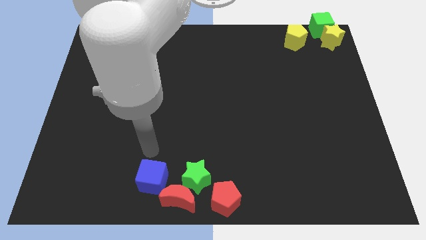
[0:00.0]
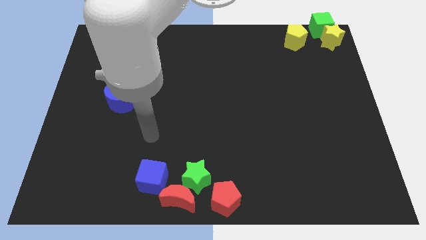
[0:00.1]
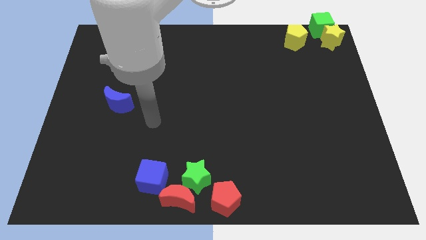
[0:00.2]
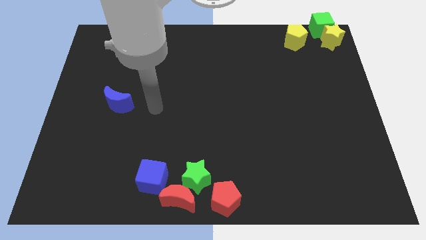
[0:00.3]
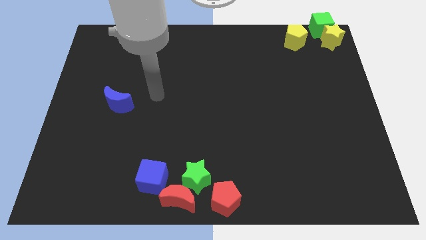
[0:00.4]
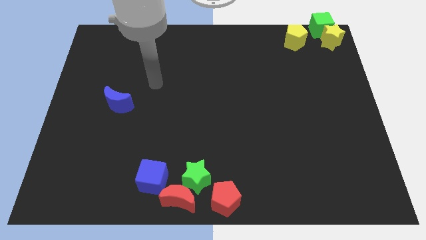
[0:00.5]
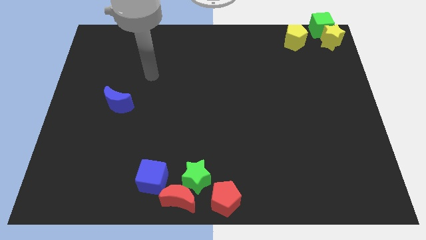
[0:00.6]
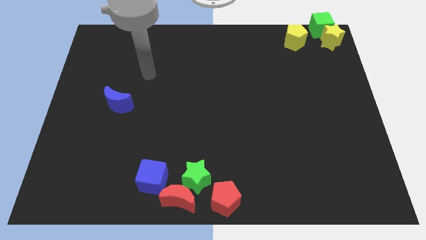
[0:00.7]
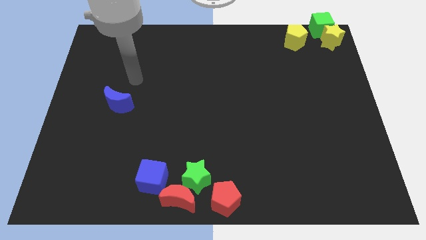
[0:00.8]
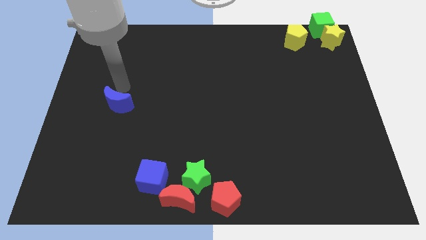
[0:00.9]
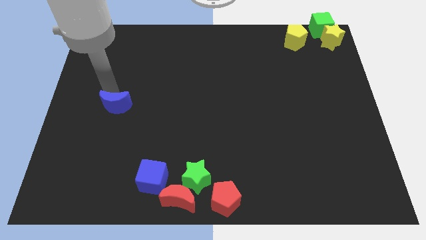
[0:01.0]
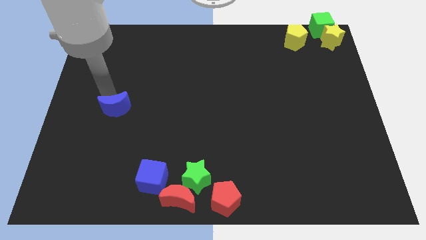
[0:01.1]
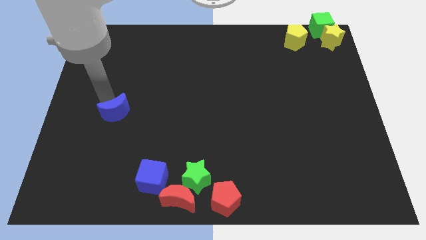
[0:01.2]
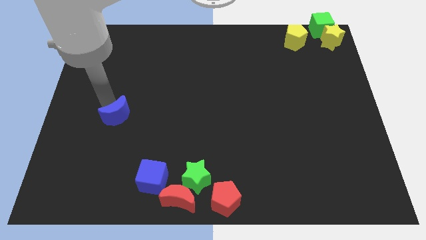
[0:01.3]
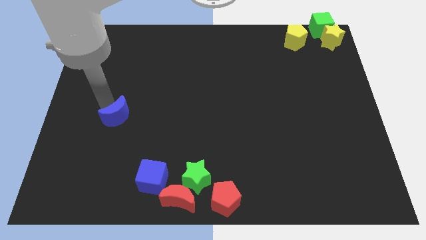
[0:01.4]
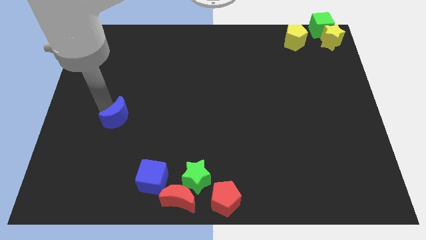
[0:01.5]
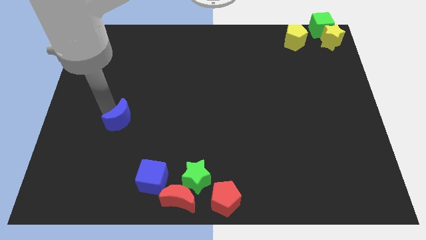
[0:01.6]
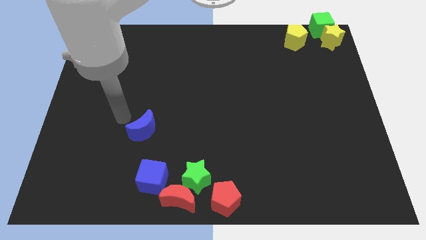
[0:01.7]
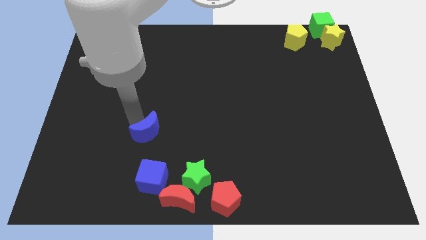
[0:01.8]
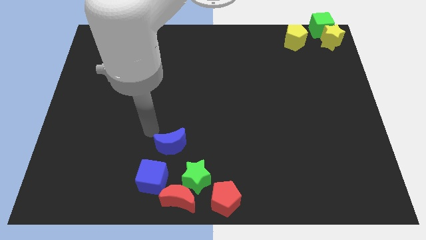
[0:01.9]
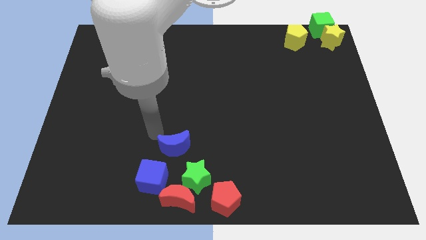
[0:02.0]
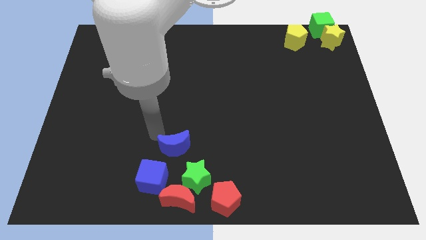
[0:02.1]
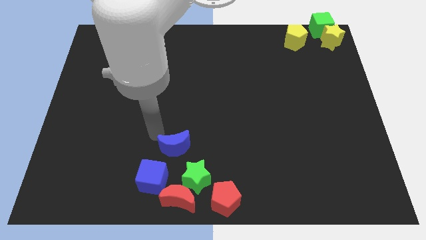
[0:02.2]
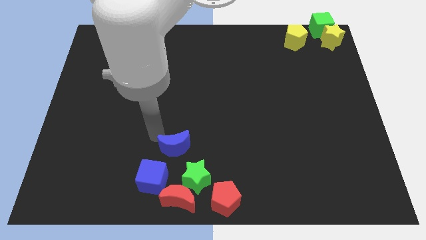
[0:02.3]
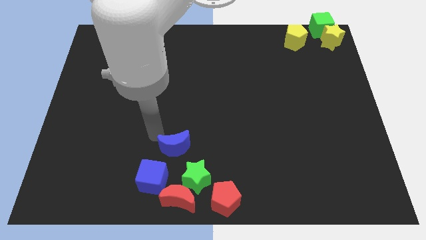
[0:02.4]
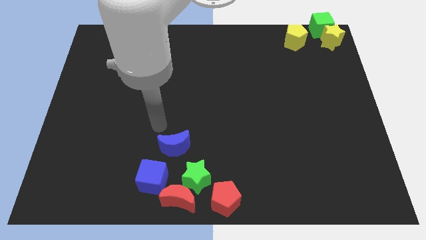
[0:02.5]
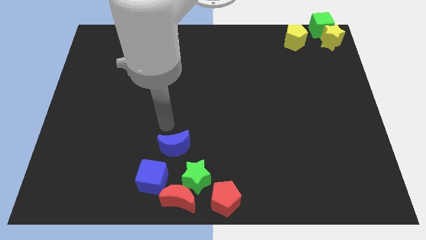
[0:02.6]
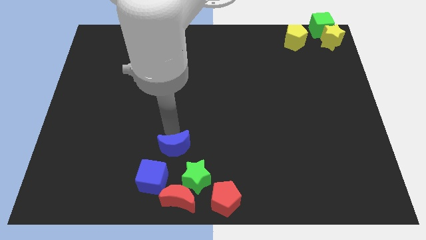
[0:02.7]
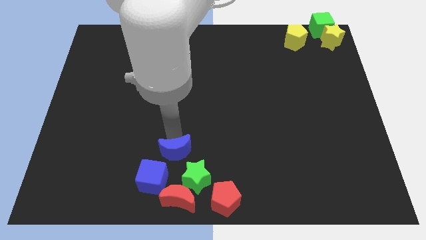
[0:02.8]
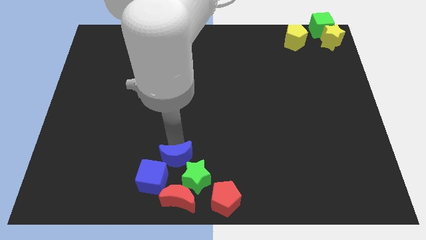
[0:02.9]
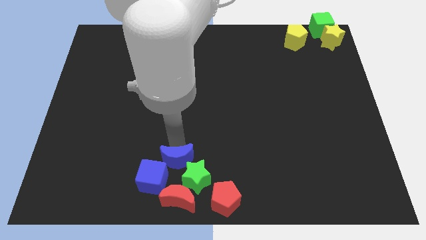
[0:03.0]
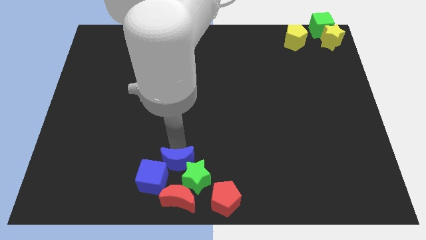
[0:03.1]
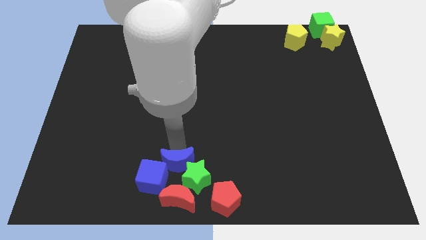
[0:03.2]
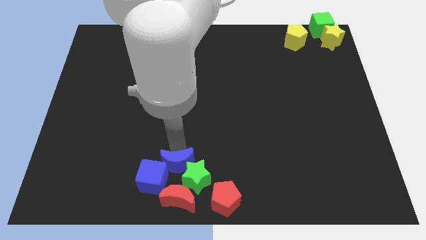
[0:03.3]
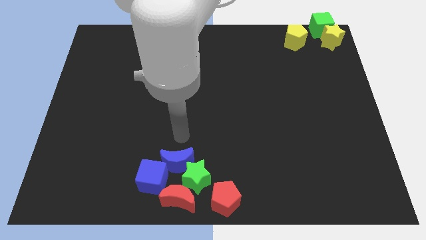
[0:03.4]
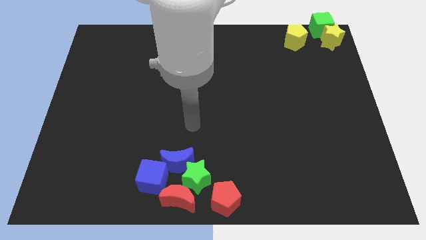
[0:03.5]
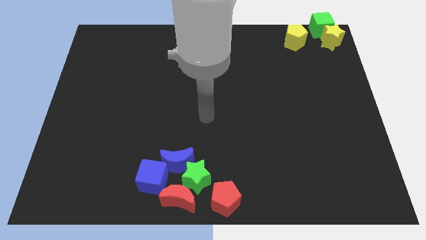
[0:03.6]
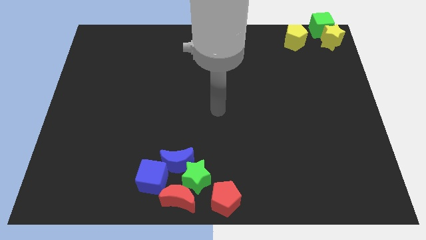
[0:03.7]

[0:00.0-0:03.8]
place blue crescent on top of blue block and green star

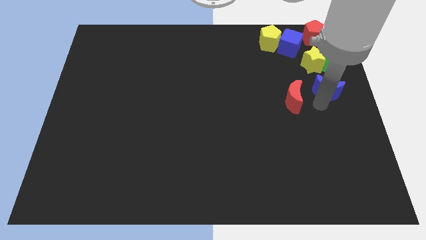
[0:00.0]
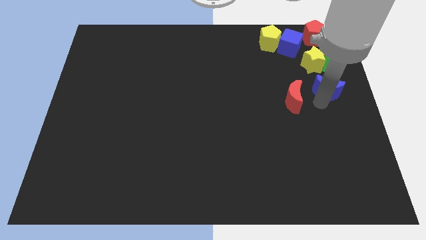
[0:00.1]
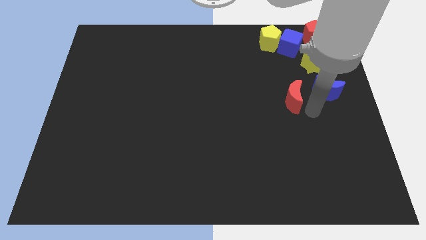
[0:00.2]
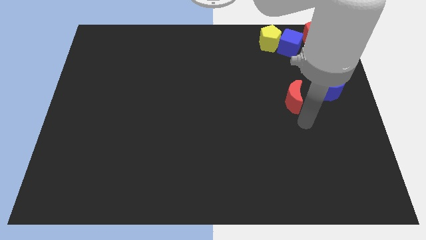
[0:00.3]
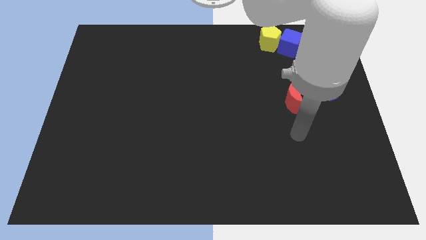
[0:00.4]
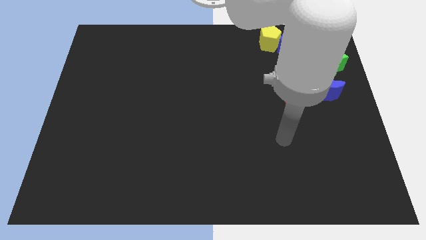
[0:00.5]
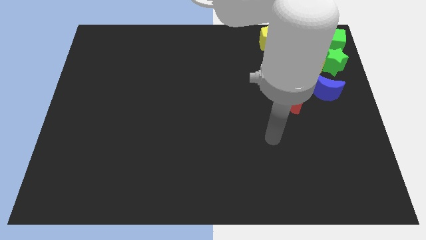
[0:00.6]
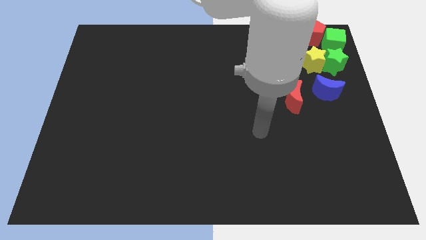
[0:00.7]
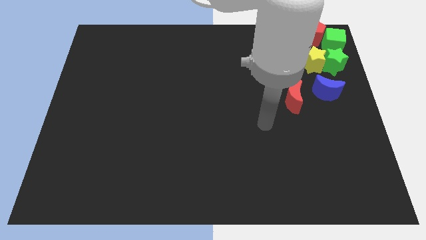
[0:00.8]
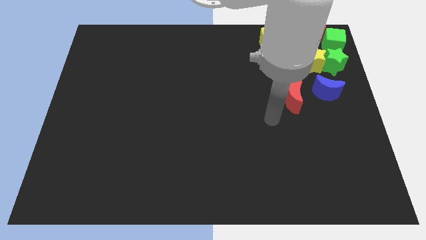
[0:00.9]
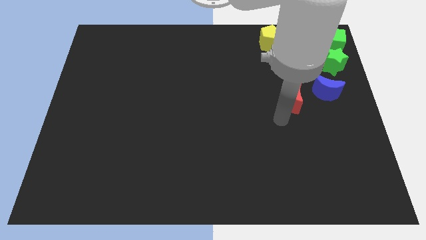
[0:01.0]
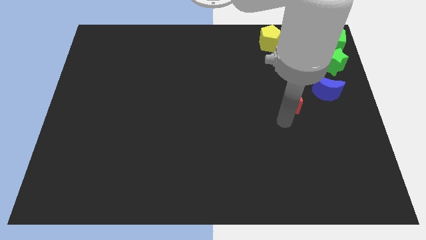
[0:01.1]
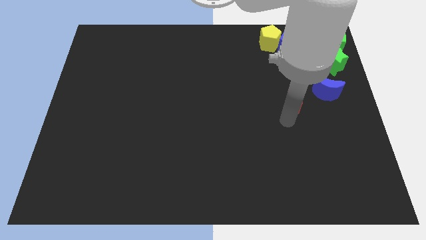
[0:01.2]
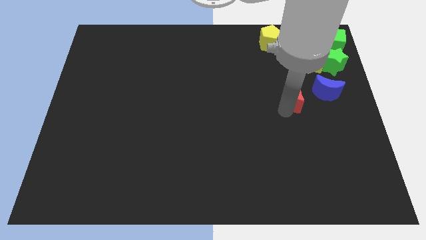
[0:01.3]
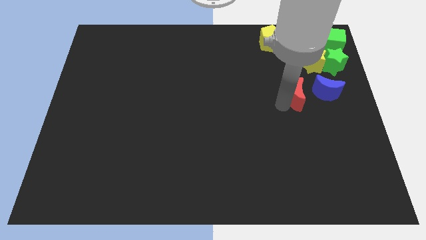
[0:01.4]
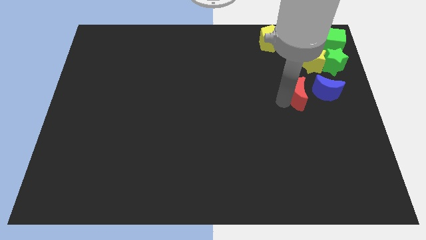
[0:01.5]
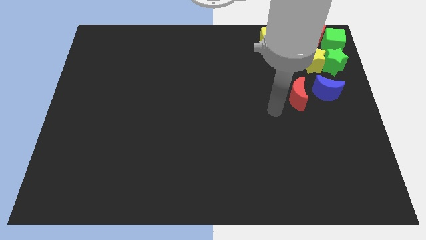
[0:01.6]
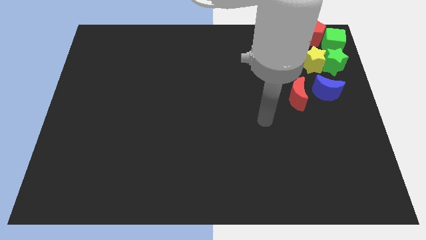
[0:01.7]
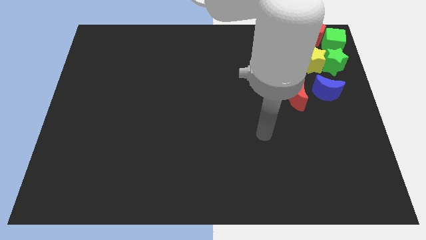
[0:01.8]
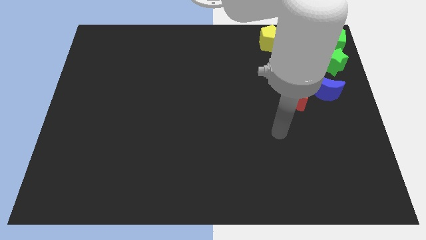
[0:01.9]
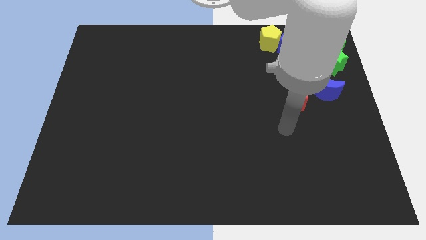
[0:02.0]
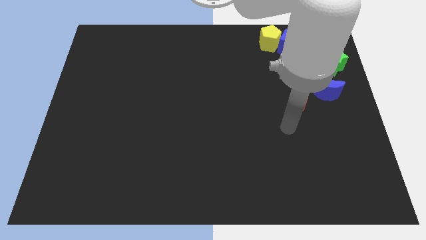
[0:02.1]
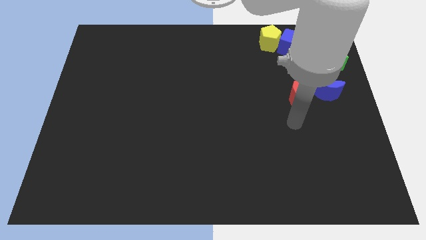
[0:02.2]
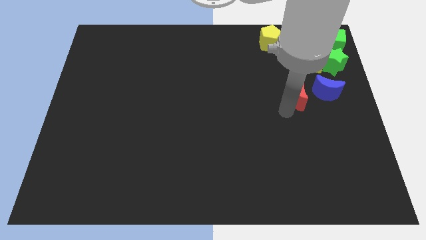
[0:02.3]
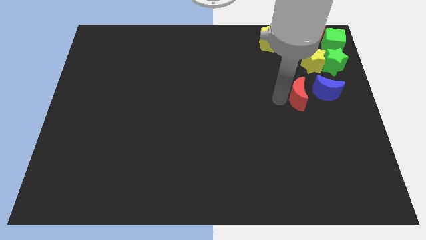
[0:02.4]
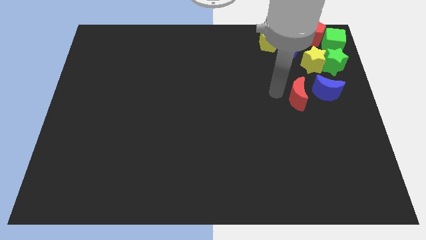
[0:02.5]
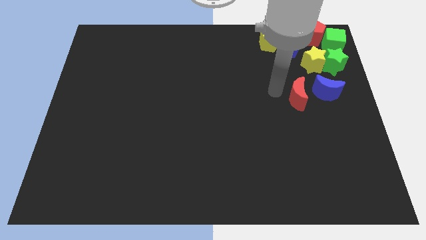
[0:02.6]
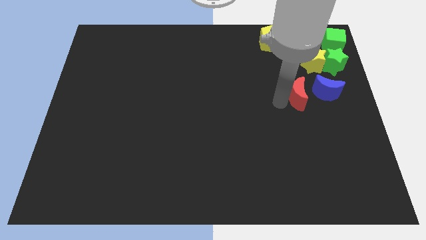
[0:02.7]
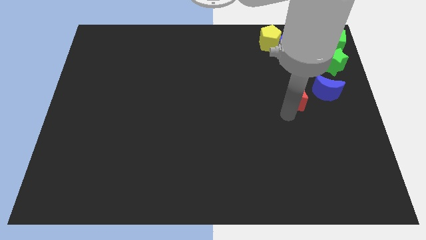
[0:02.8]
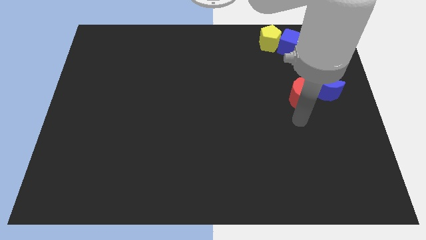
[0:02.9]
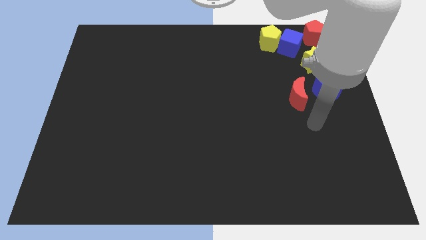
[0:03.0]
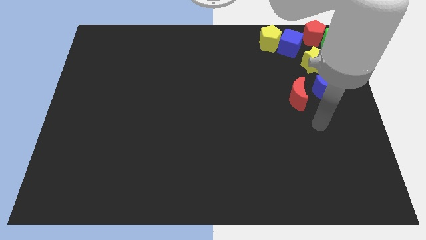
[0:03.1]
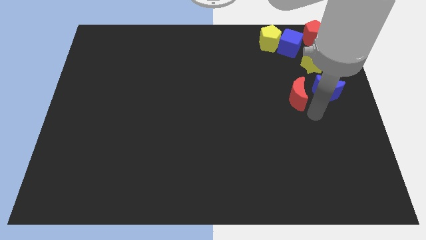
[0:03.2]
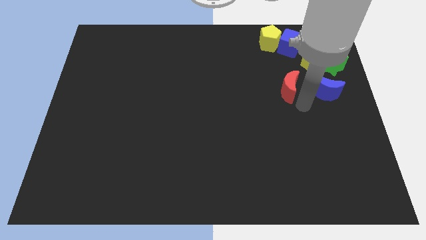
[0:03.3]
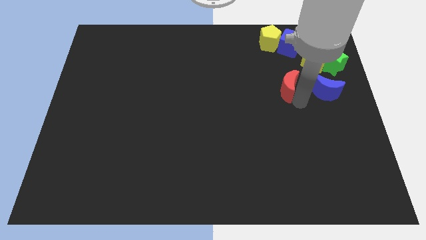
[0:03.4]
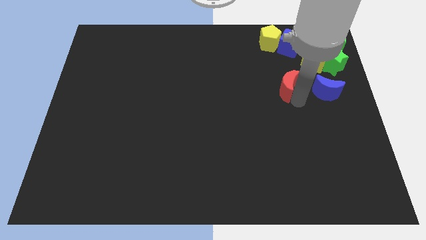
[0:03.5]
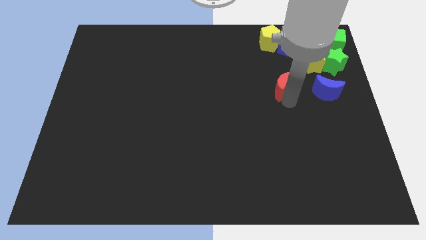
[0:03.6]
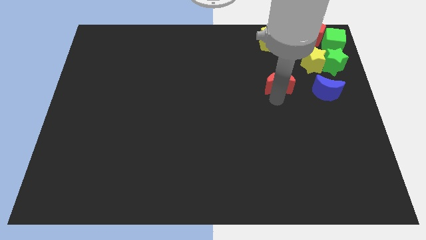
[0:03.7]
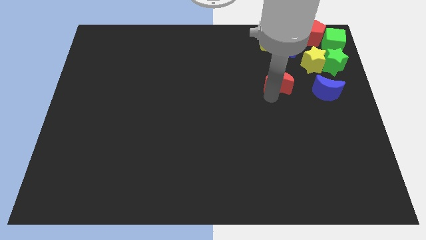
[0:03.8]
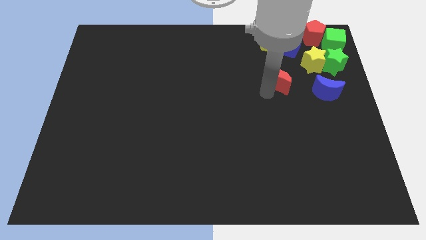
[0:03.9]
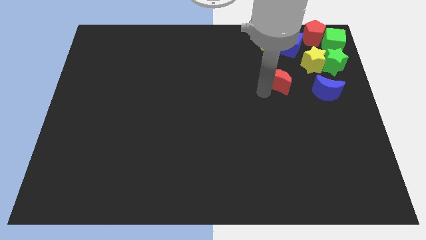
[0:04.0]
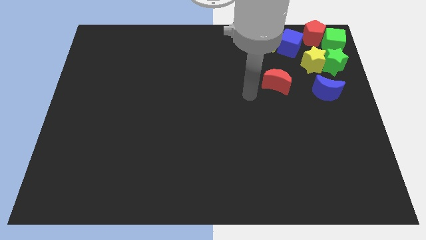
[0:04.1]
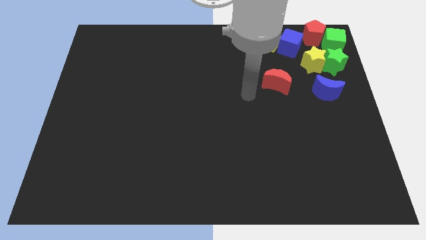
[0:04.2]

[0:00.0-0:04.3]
move the red crescent slightly to the left

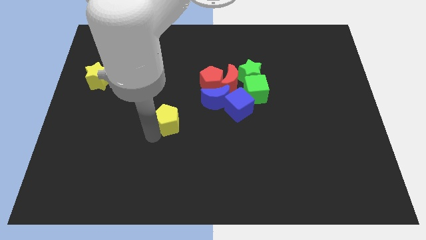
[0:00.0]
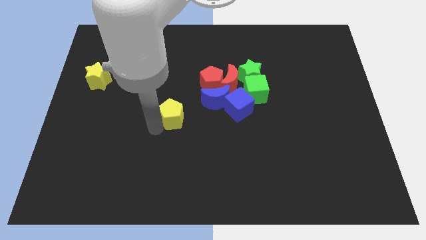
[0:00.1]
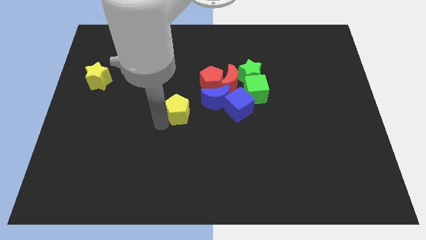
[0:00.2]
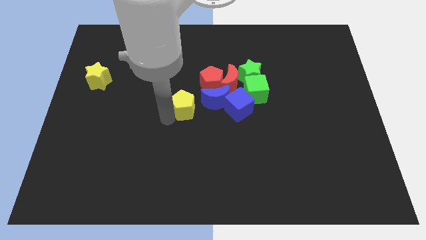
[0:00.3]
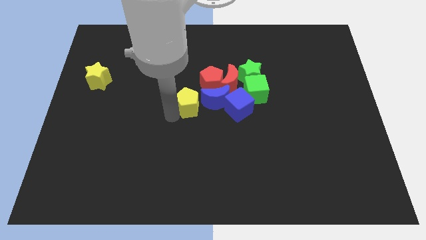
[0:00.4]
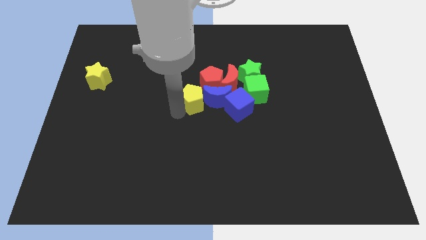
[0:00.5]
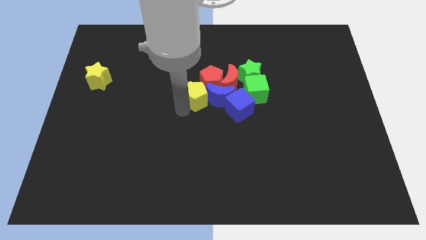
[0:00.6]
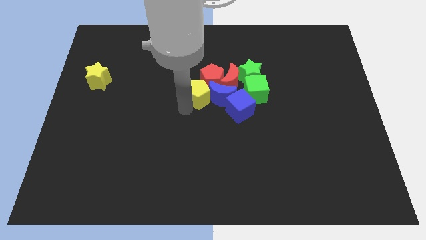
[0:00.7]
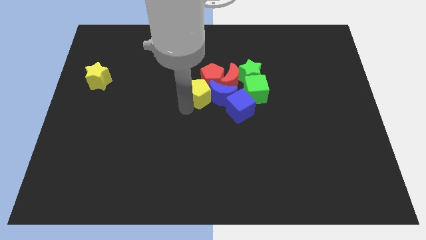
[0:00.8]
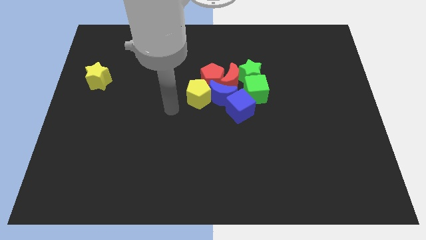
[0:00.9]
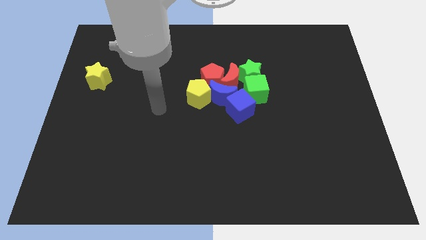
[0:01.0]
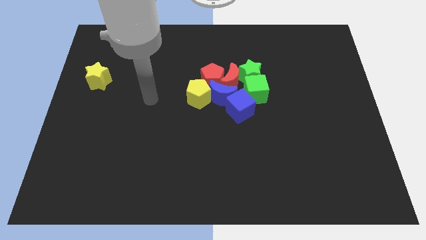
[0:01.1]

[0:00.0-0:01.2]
move the yellow pentagon into the group of blocks
